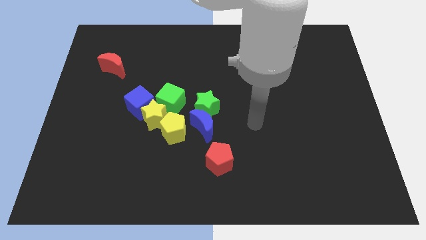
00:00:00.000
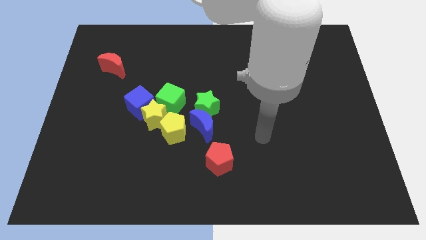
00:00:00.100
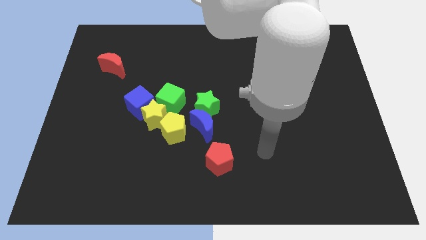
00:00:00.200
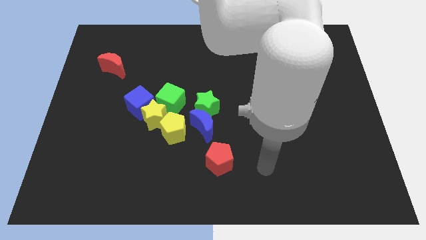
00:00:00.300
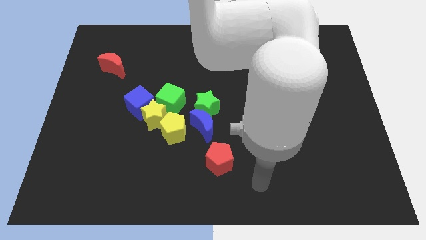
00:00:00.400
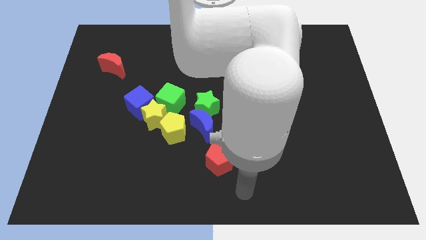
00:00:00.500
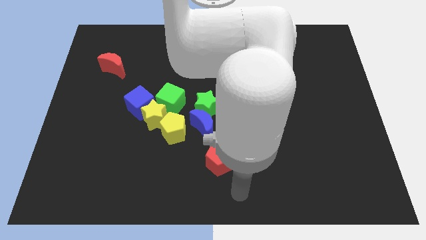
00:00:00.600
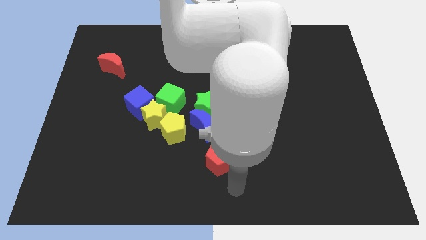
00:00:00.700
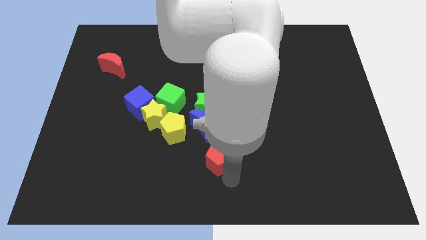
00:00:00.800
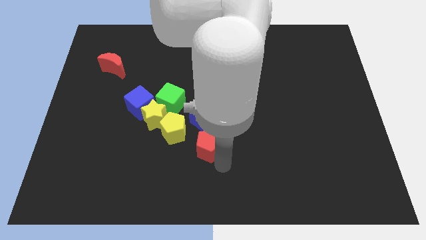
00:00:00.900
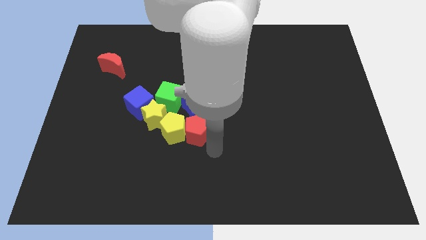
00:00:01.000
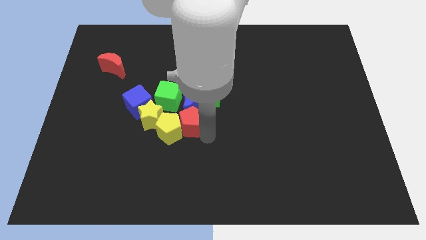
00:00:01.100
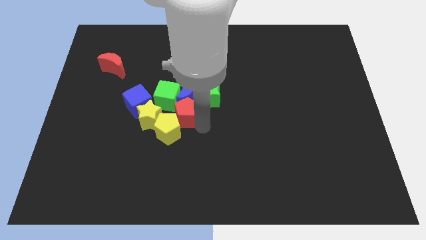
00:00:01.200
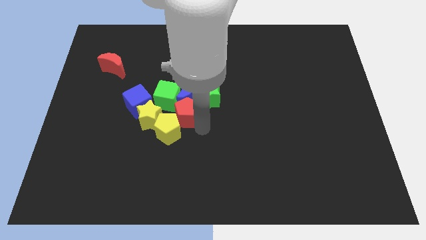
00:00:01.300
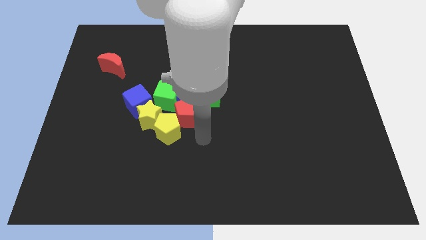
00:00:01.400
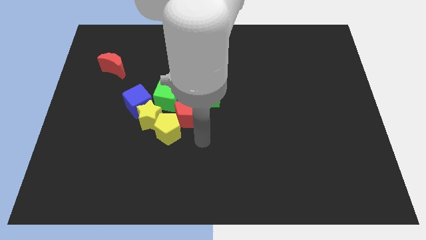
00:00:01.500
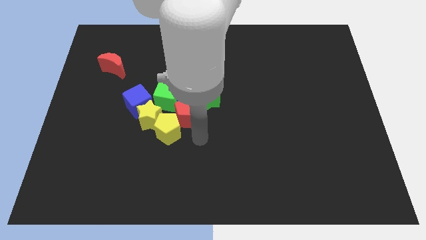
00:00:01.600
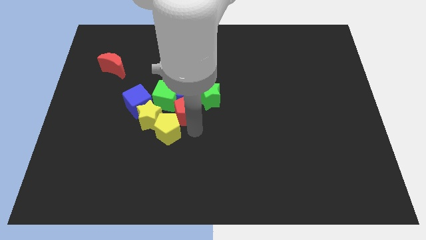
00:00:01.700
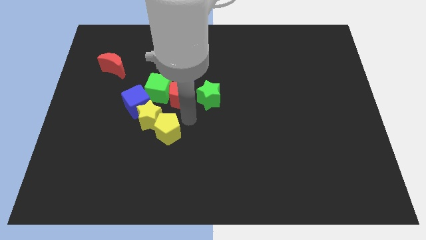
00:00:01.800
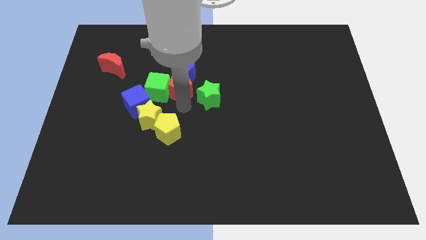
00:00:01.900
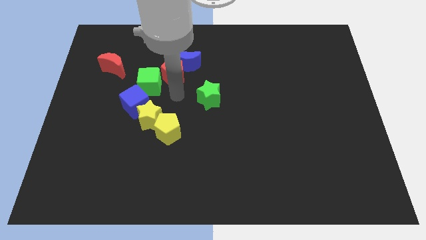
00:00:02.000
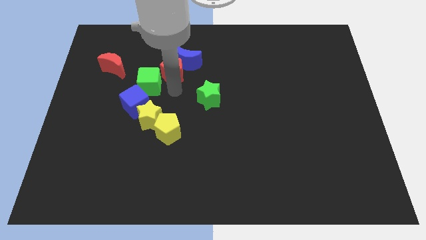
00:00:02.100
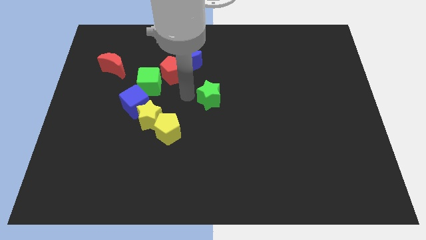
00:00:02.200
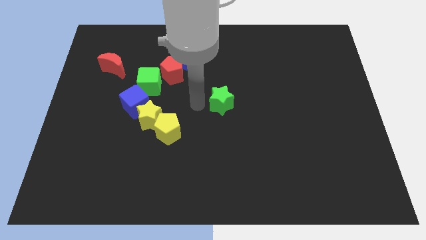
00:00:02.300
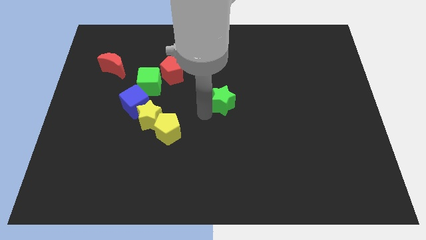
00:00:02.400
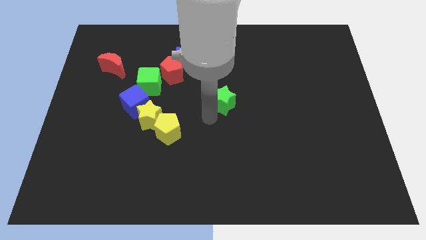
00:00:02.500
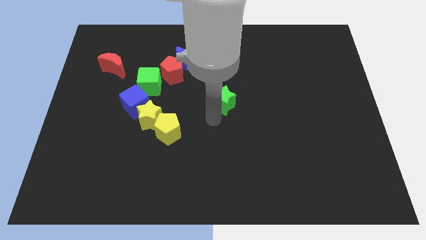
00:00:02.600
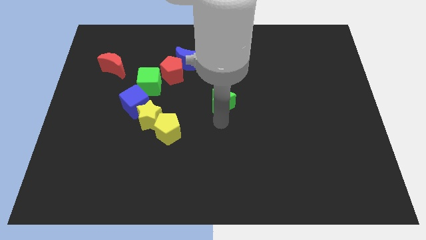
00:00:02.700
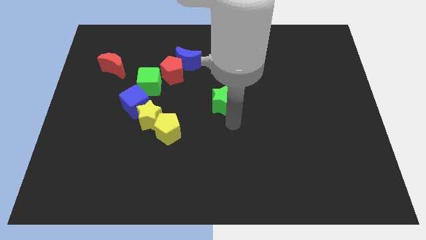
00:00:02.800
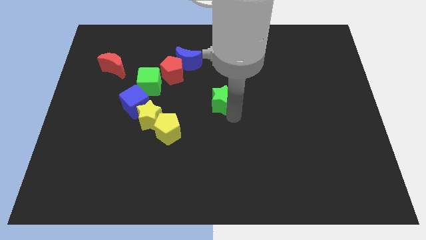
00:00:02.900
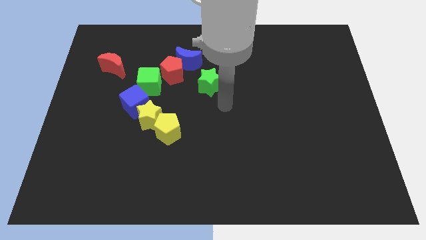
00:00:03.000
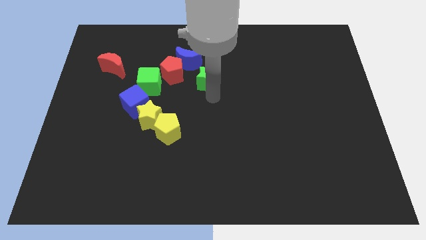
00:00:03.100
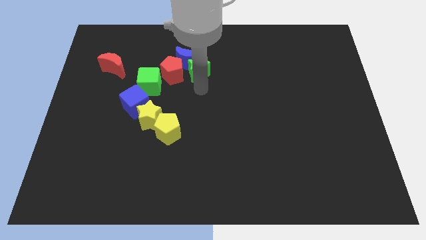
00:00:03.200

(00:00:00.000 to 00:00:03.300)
push the group of red pentagon blue crescent and green star to the top side of the board

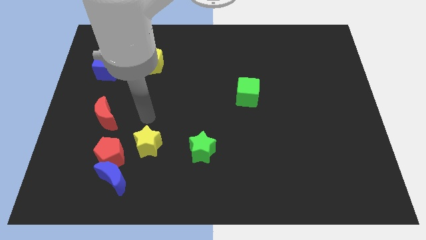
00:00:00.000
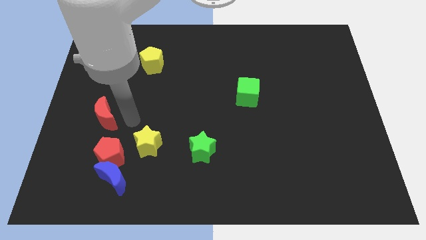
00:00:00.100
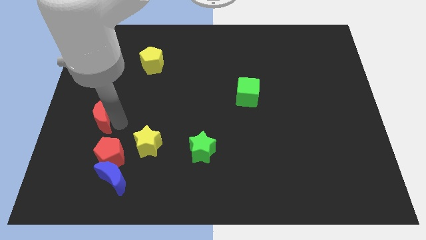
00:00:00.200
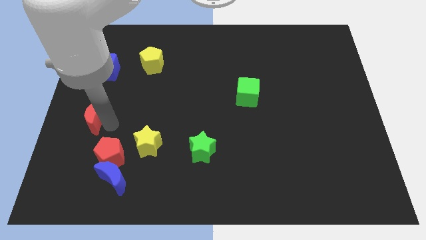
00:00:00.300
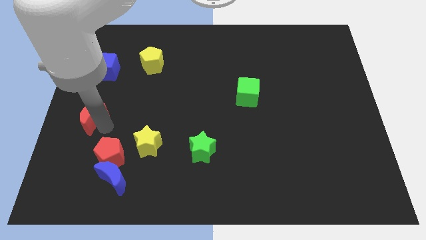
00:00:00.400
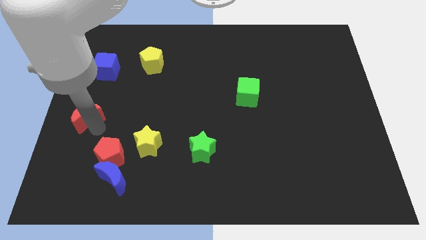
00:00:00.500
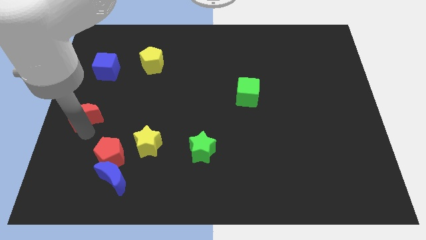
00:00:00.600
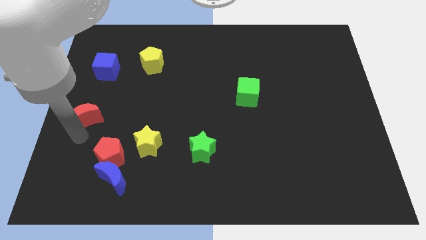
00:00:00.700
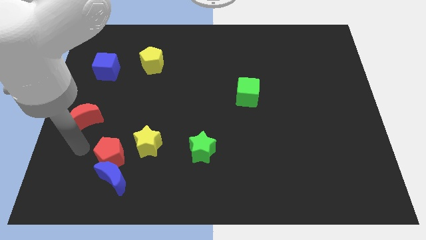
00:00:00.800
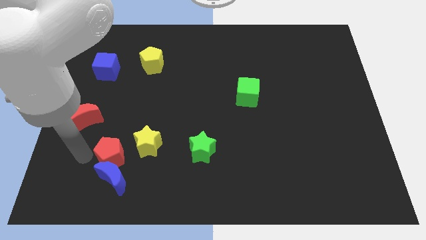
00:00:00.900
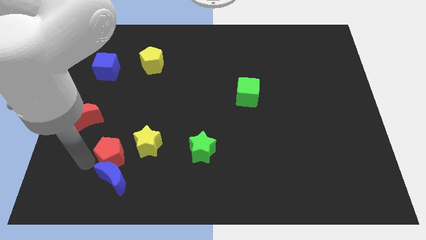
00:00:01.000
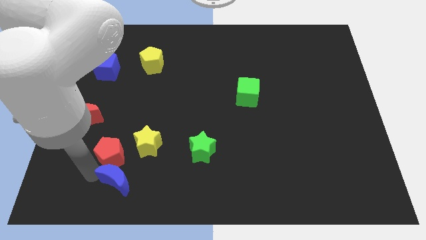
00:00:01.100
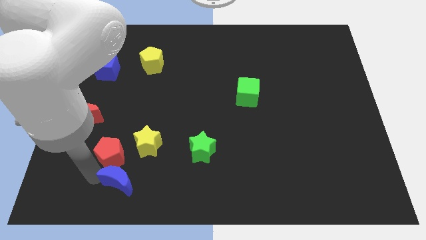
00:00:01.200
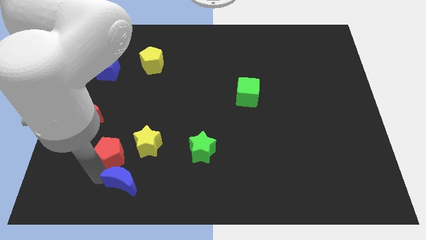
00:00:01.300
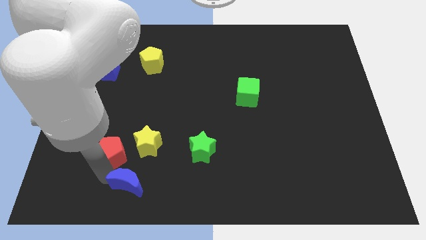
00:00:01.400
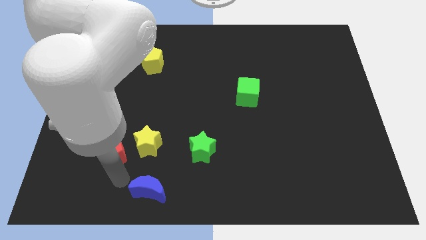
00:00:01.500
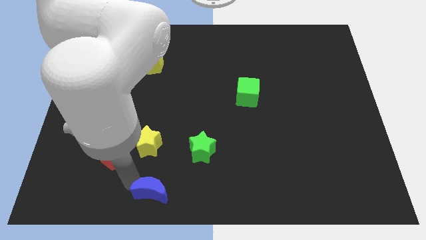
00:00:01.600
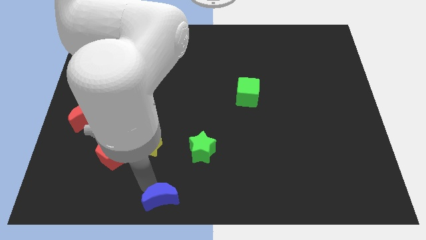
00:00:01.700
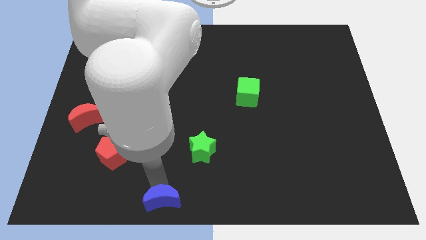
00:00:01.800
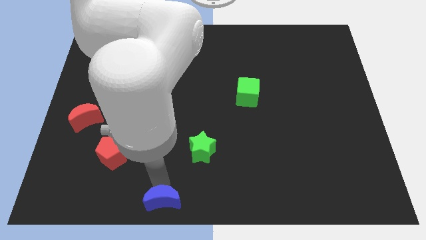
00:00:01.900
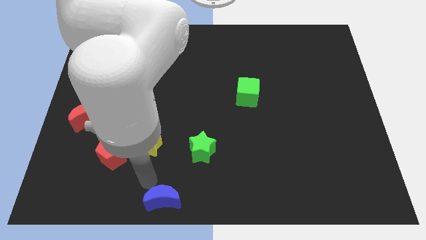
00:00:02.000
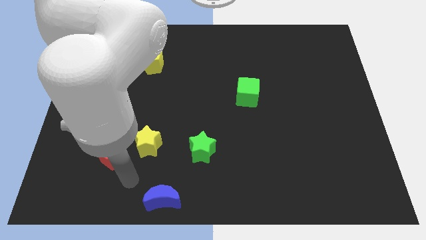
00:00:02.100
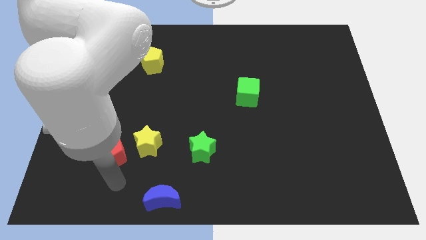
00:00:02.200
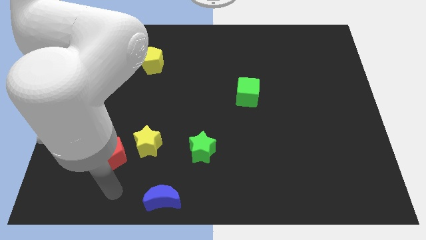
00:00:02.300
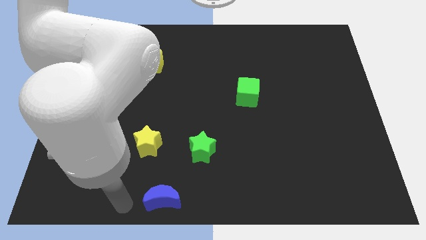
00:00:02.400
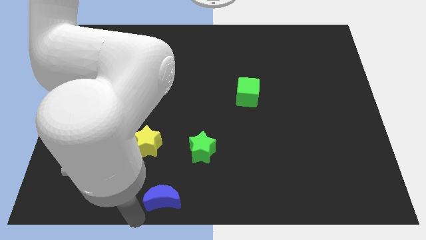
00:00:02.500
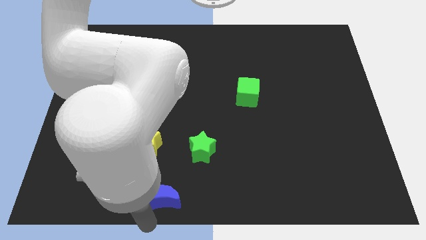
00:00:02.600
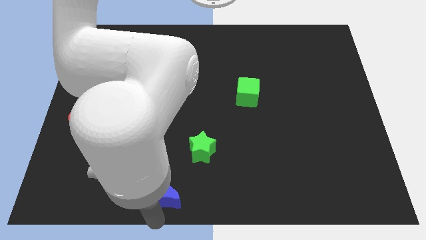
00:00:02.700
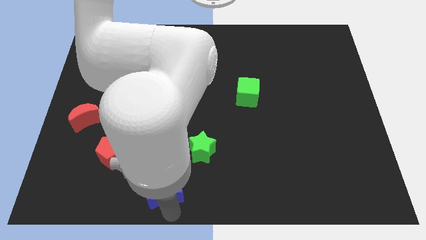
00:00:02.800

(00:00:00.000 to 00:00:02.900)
place the arm down to the blue moon

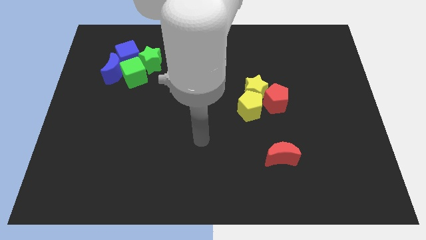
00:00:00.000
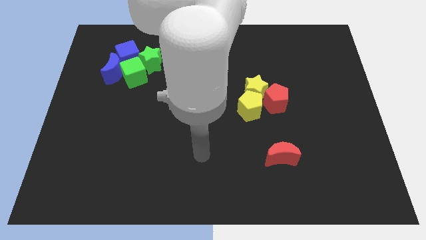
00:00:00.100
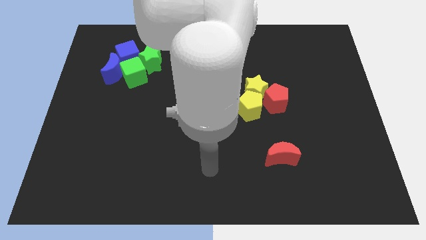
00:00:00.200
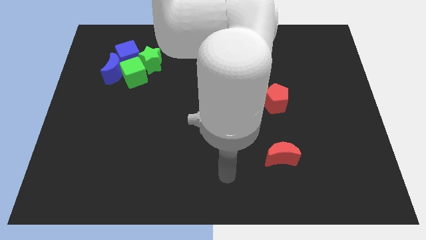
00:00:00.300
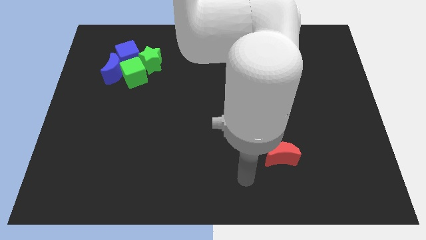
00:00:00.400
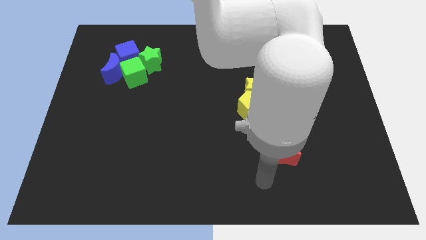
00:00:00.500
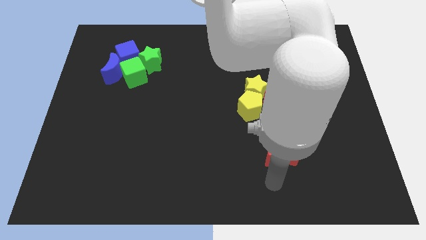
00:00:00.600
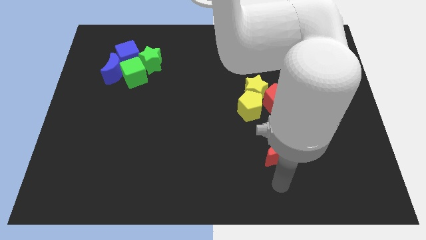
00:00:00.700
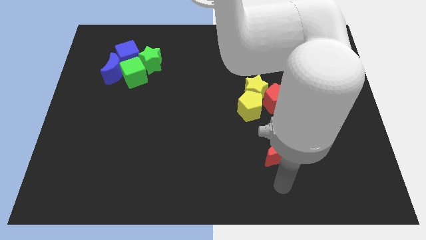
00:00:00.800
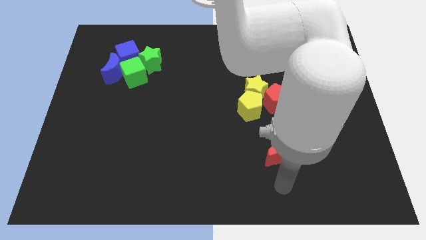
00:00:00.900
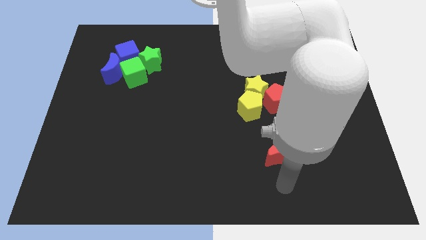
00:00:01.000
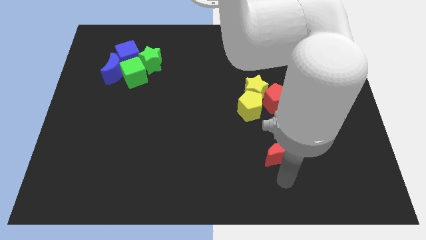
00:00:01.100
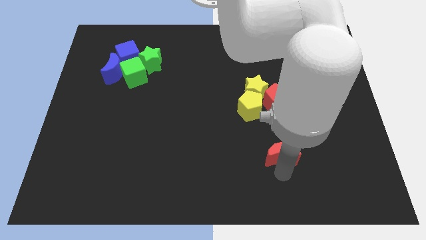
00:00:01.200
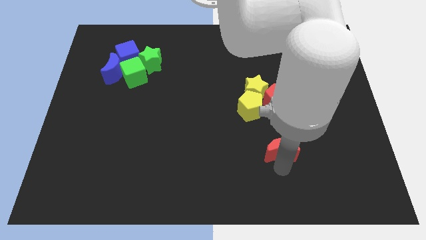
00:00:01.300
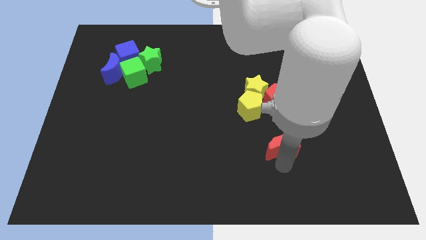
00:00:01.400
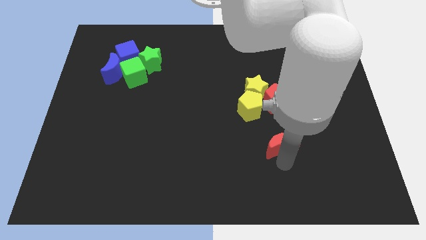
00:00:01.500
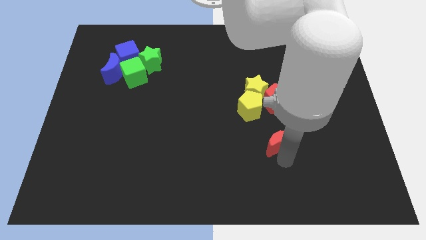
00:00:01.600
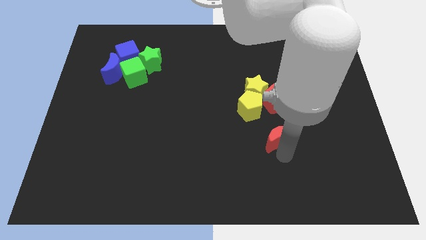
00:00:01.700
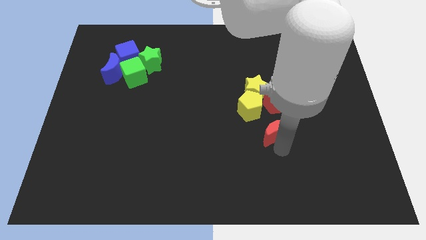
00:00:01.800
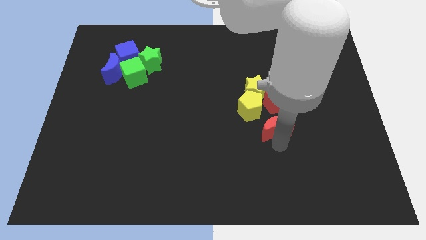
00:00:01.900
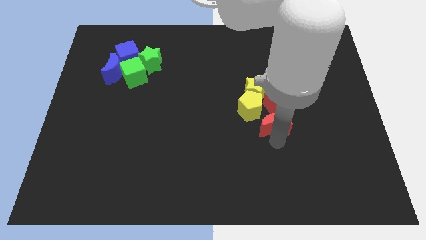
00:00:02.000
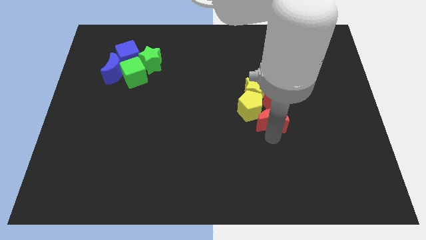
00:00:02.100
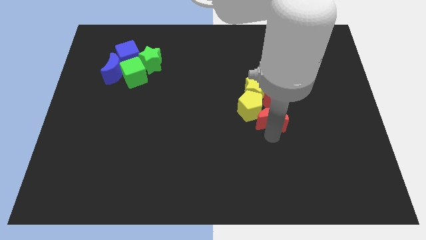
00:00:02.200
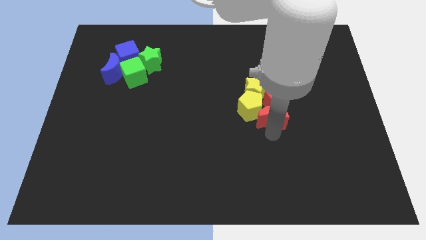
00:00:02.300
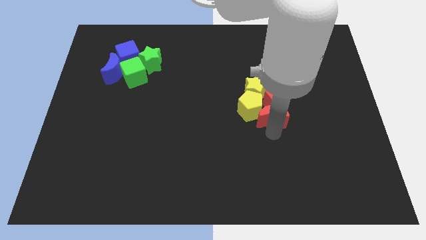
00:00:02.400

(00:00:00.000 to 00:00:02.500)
move the red moon to the into yellow blocks and red pentagon

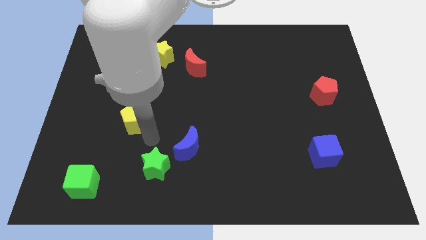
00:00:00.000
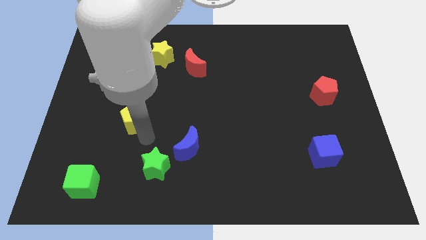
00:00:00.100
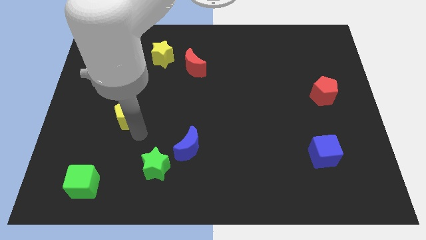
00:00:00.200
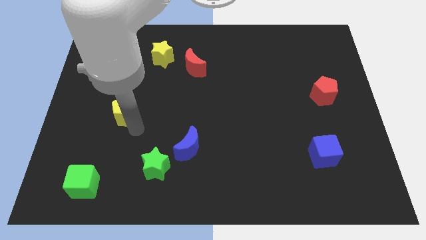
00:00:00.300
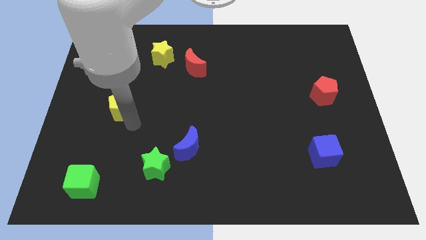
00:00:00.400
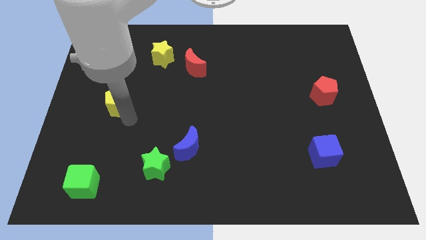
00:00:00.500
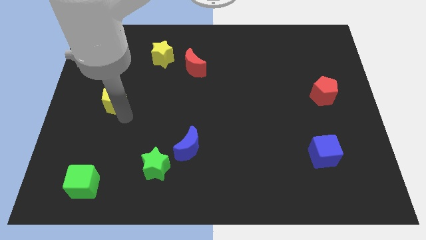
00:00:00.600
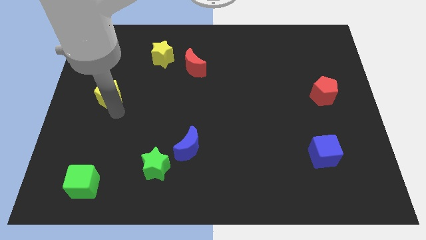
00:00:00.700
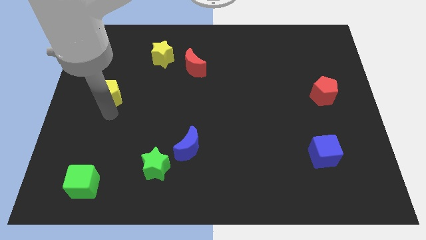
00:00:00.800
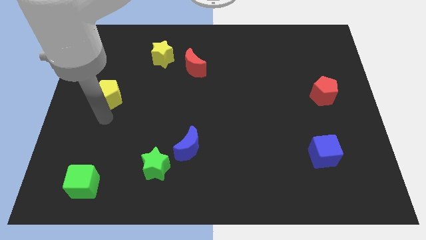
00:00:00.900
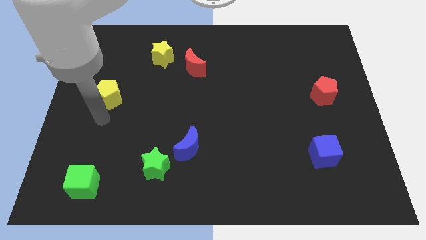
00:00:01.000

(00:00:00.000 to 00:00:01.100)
move yellow pentagon slightly left
